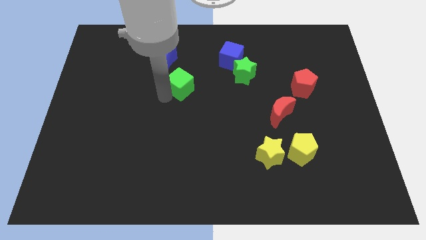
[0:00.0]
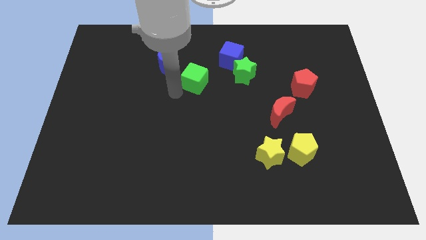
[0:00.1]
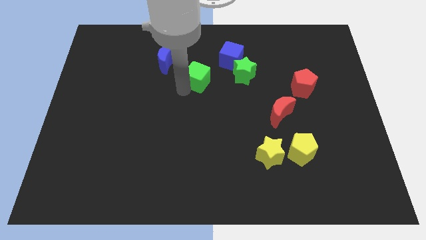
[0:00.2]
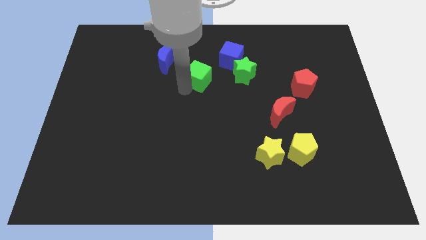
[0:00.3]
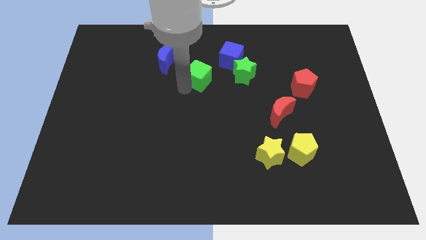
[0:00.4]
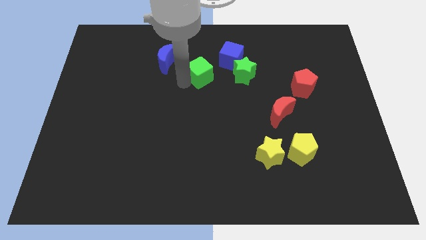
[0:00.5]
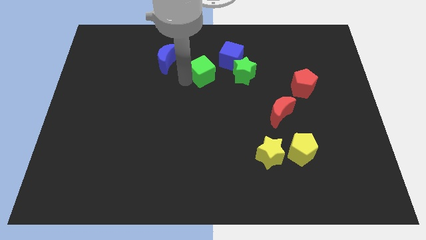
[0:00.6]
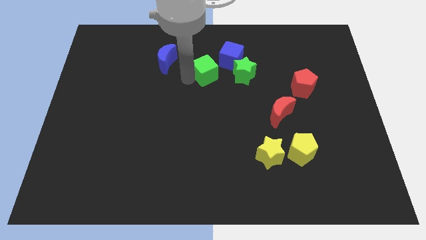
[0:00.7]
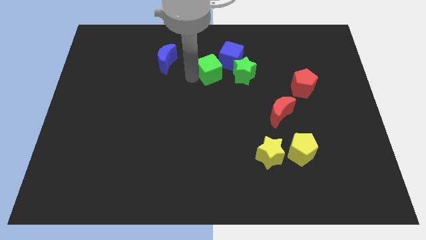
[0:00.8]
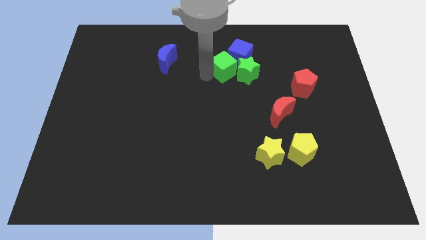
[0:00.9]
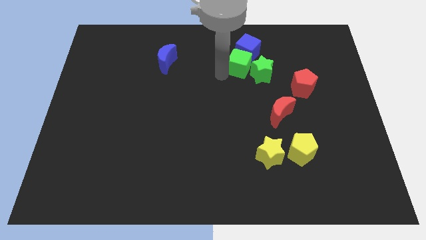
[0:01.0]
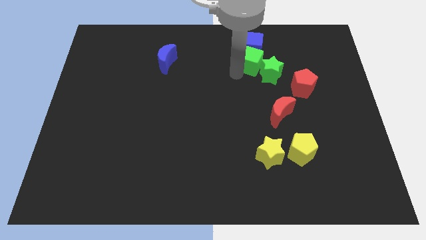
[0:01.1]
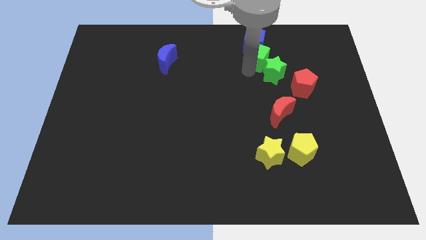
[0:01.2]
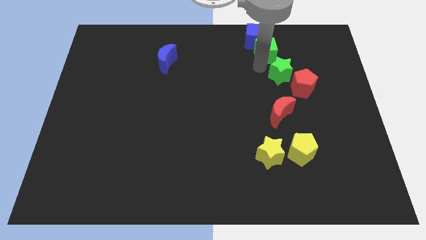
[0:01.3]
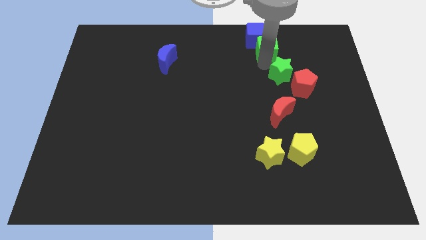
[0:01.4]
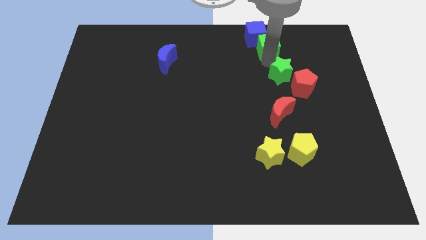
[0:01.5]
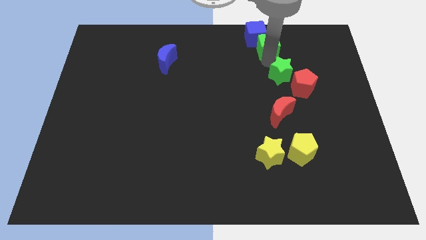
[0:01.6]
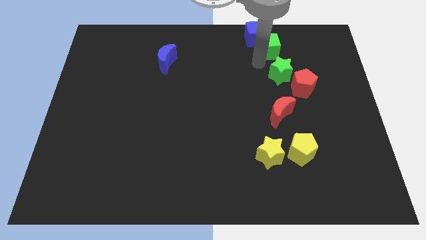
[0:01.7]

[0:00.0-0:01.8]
separate the green star and the blue cube

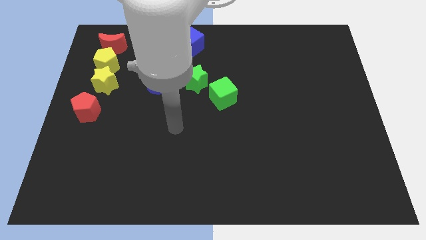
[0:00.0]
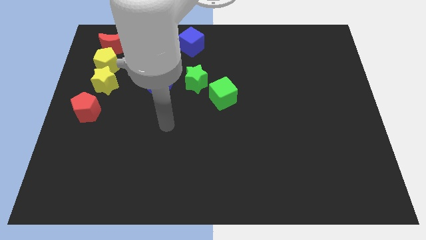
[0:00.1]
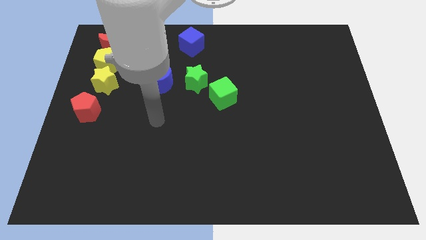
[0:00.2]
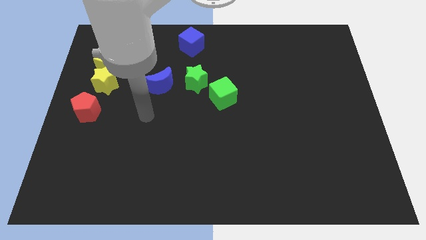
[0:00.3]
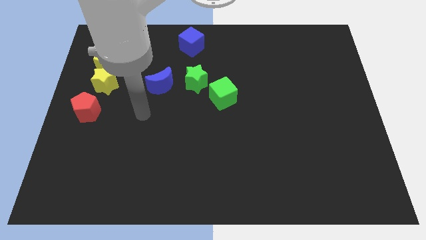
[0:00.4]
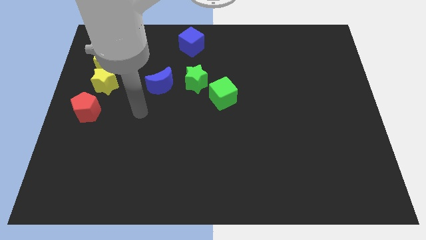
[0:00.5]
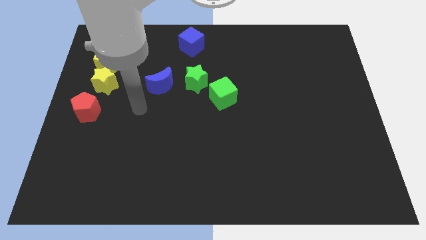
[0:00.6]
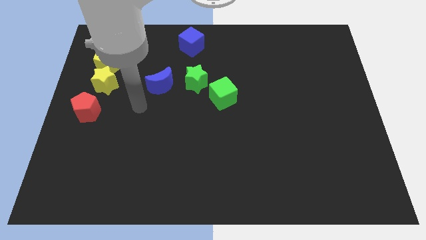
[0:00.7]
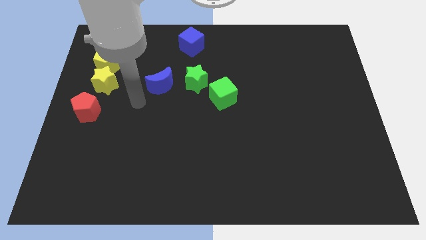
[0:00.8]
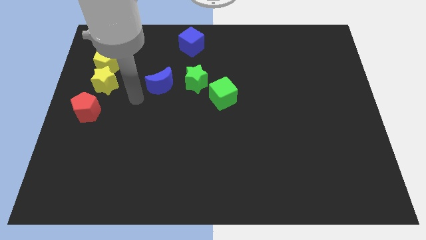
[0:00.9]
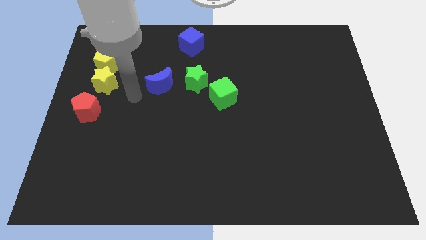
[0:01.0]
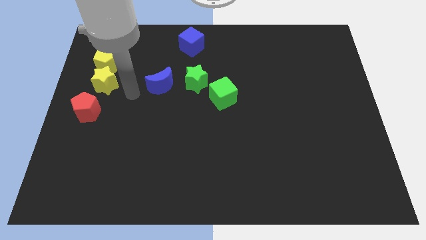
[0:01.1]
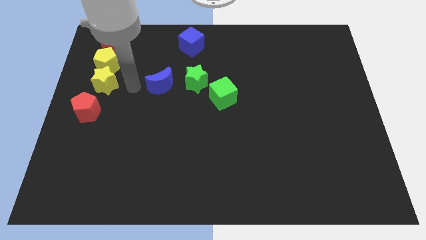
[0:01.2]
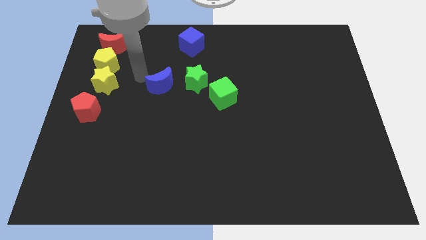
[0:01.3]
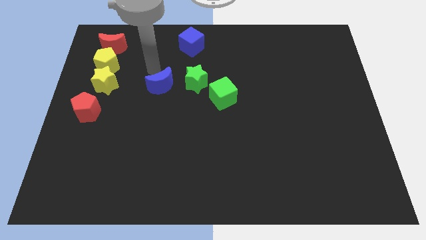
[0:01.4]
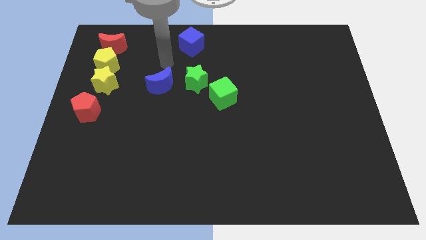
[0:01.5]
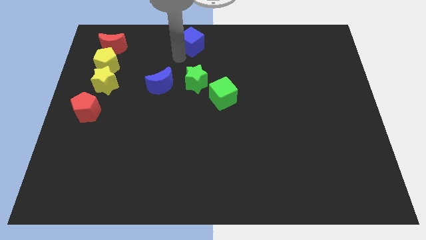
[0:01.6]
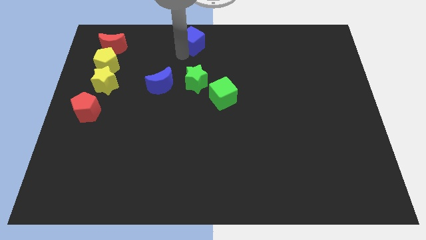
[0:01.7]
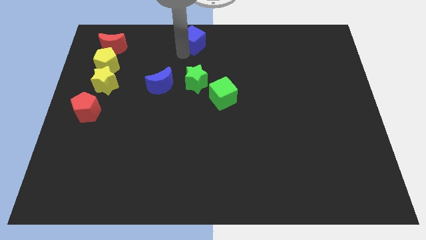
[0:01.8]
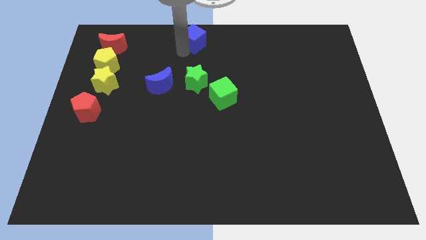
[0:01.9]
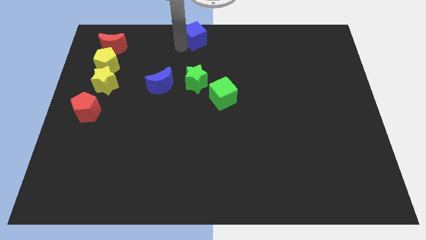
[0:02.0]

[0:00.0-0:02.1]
slightly push the blue cube to the top center

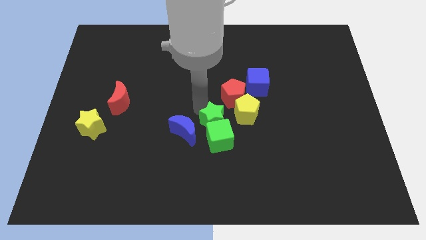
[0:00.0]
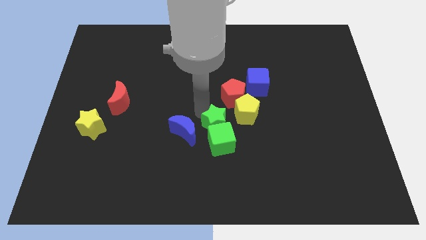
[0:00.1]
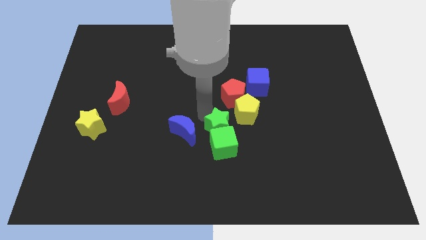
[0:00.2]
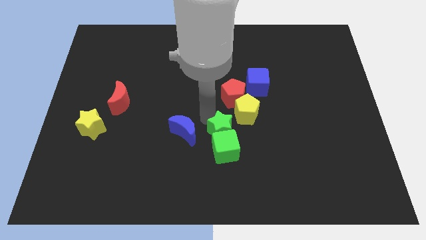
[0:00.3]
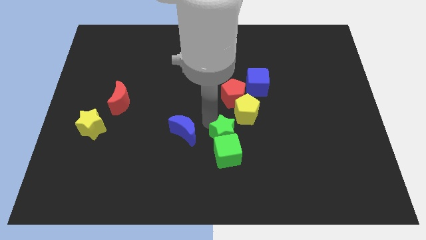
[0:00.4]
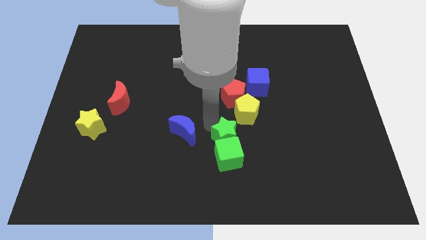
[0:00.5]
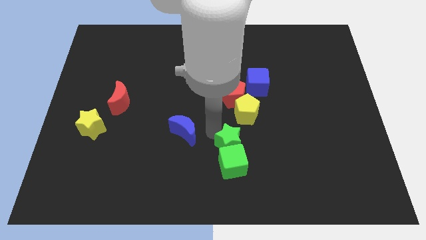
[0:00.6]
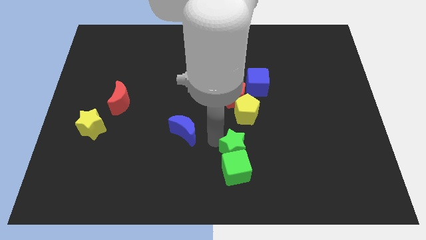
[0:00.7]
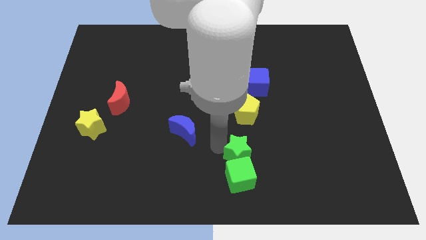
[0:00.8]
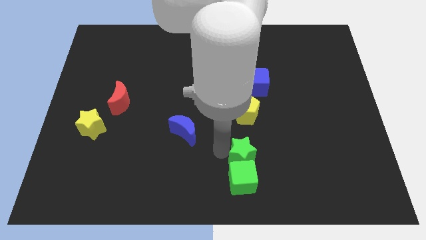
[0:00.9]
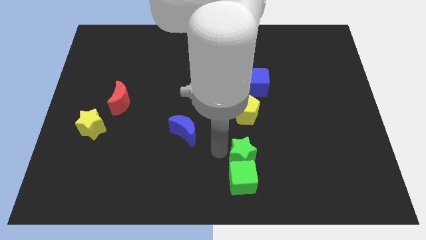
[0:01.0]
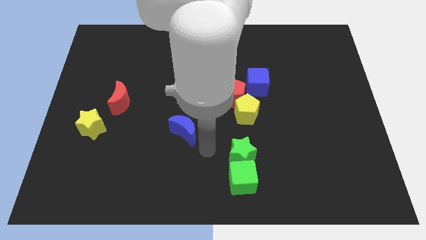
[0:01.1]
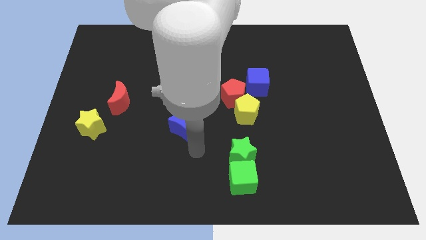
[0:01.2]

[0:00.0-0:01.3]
push the group of green blocks to the bottom

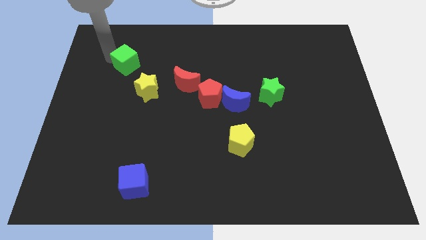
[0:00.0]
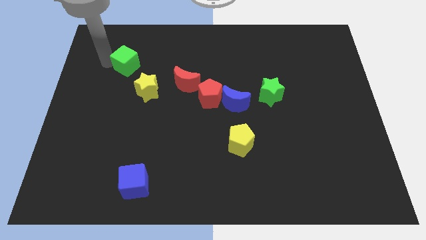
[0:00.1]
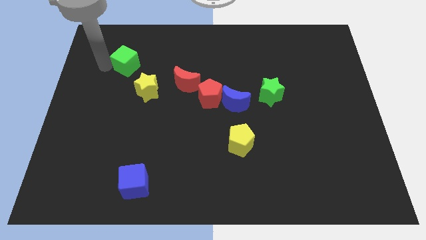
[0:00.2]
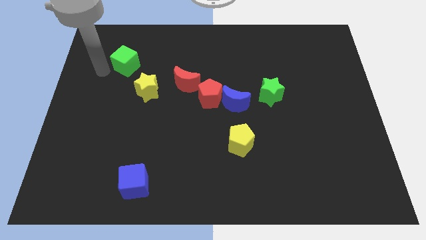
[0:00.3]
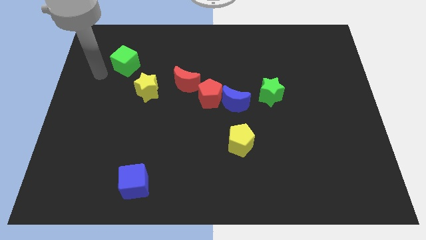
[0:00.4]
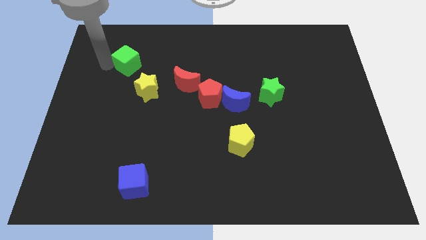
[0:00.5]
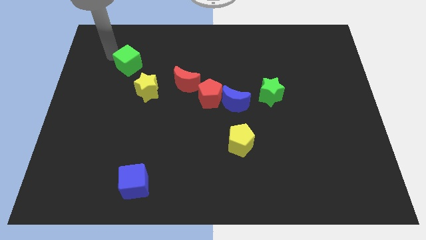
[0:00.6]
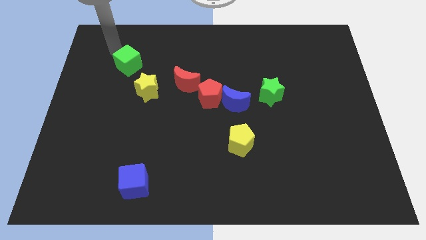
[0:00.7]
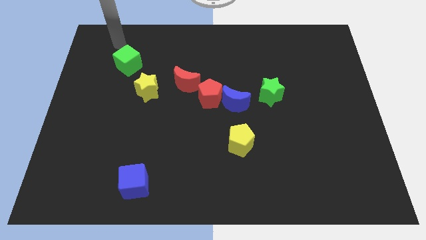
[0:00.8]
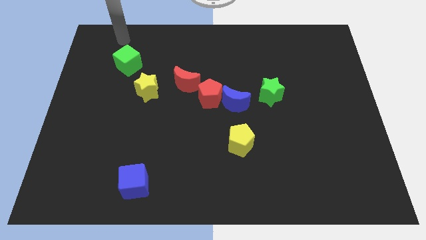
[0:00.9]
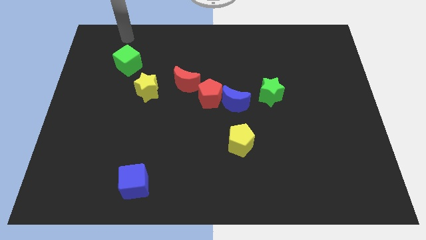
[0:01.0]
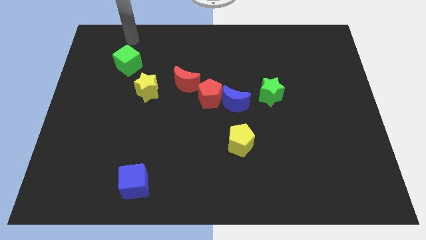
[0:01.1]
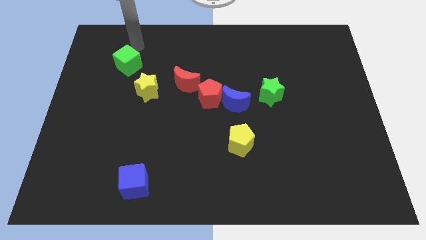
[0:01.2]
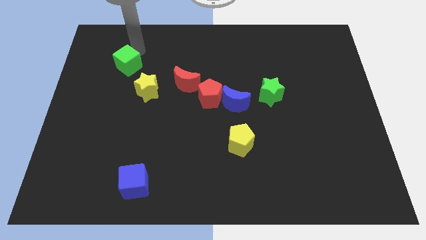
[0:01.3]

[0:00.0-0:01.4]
place your hand to the top right of green cube

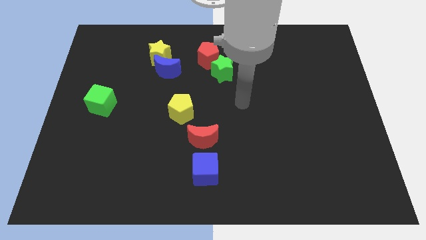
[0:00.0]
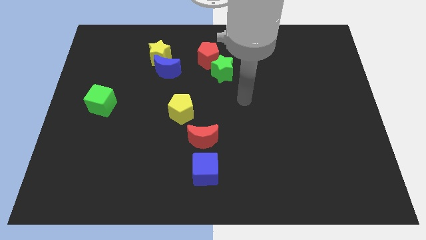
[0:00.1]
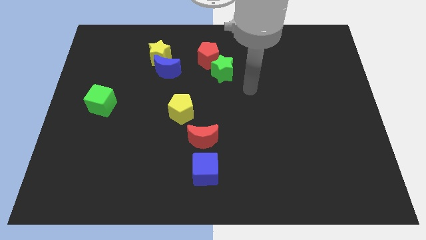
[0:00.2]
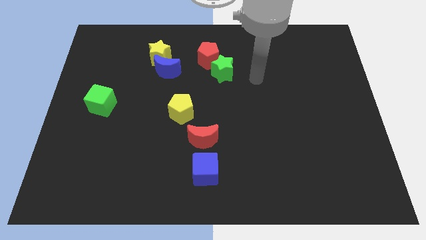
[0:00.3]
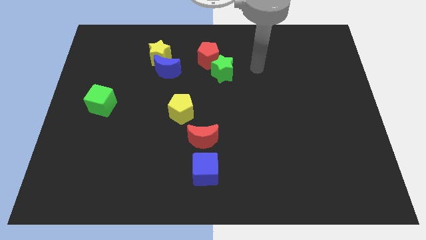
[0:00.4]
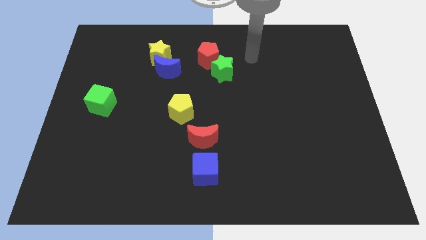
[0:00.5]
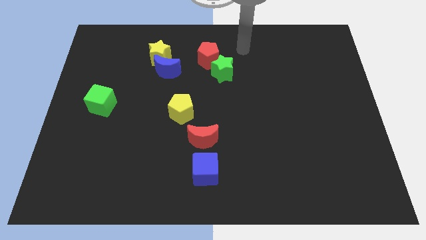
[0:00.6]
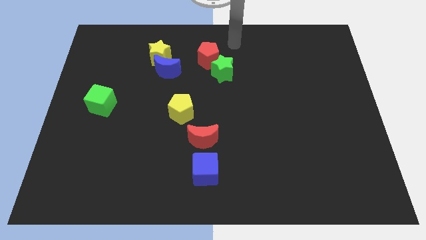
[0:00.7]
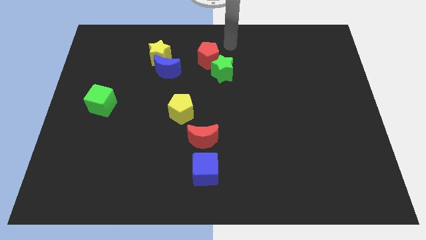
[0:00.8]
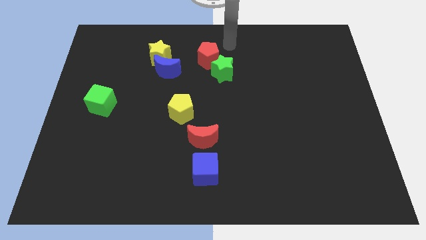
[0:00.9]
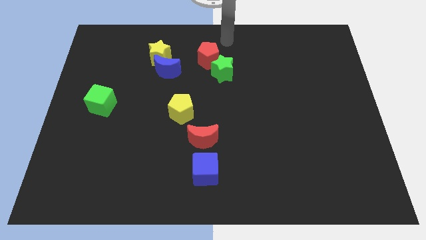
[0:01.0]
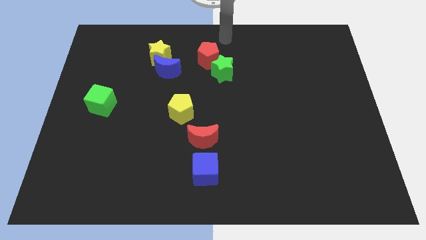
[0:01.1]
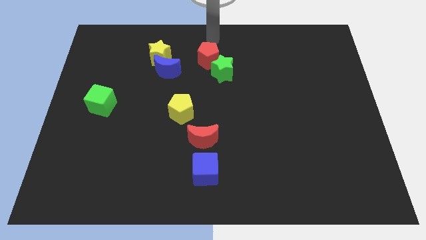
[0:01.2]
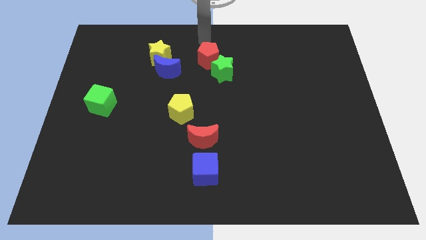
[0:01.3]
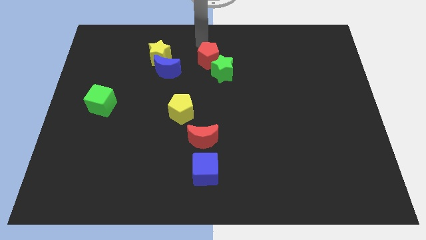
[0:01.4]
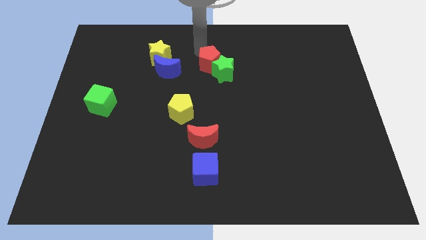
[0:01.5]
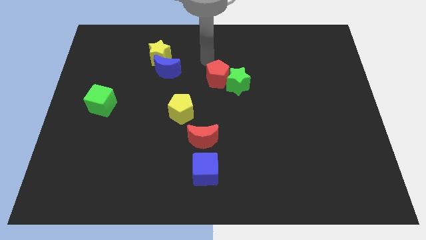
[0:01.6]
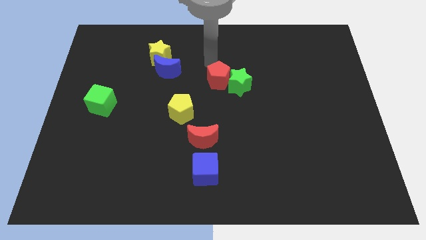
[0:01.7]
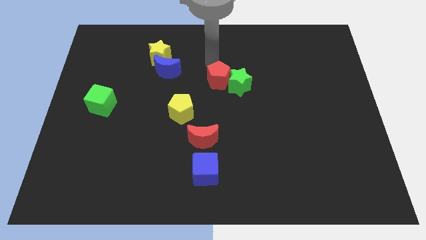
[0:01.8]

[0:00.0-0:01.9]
push the red pentagon and green star towards center of the board

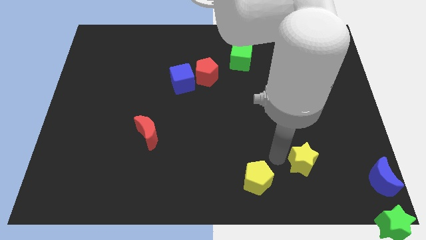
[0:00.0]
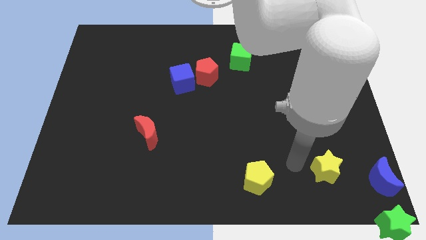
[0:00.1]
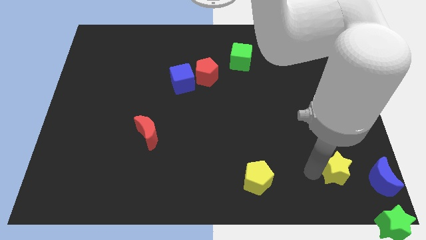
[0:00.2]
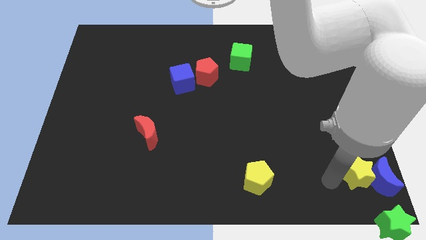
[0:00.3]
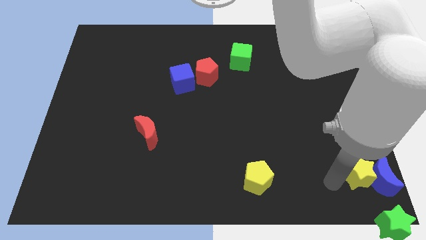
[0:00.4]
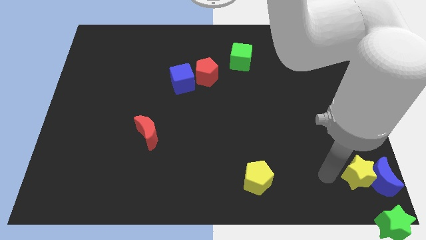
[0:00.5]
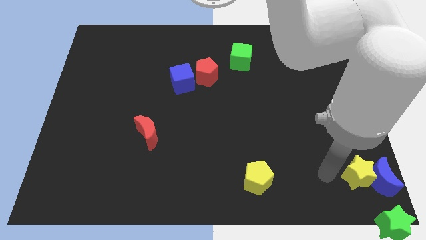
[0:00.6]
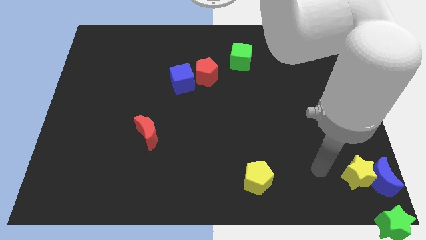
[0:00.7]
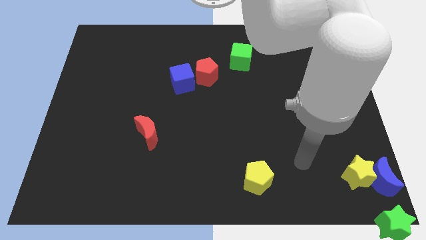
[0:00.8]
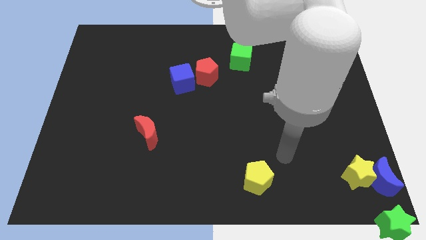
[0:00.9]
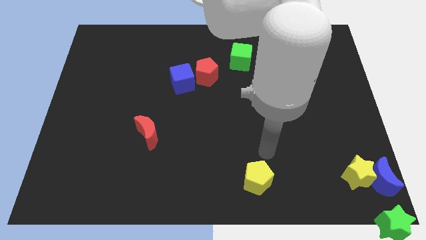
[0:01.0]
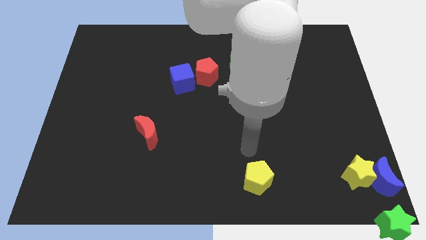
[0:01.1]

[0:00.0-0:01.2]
move the yellow star into the blue moon
